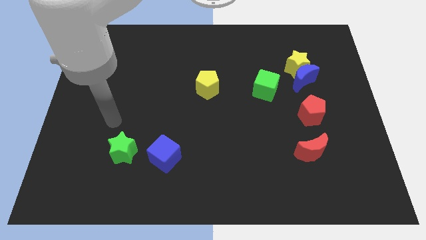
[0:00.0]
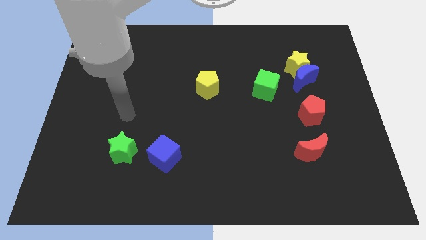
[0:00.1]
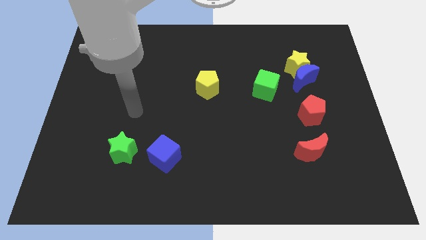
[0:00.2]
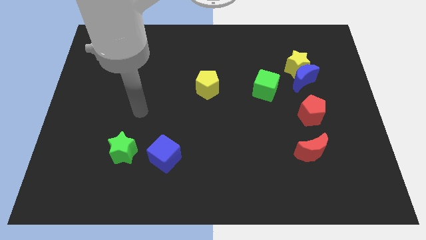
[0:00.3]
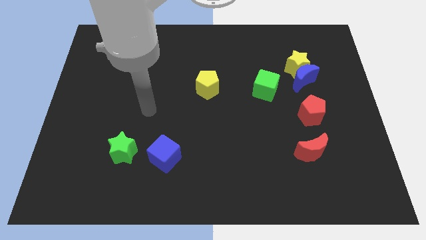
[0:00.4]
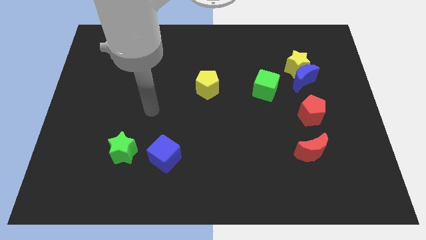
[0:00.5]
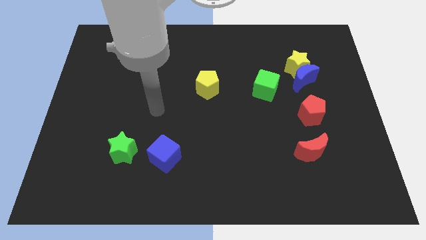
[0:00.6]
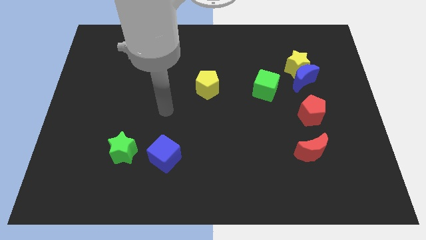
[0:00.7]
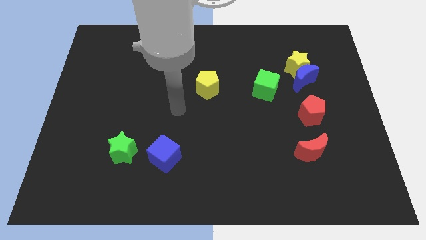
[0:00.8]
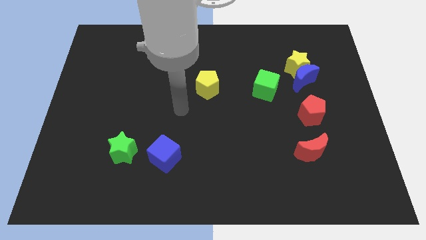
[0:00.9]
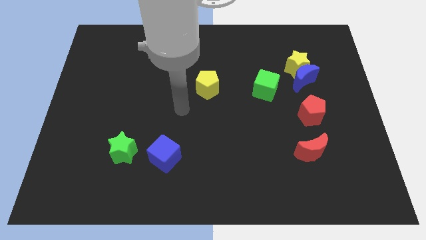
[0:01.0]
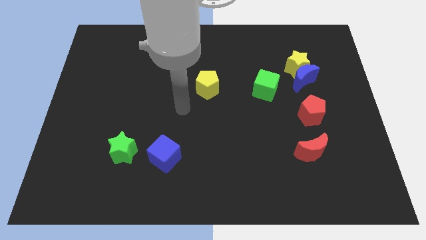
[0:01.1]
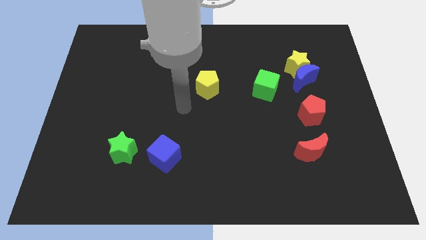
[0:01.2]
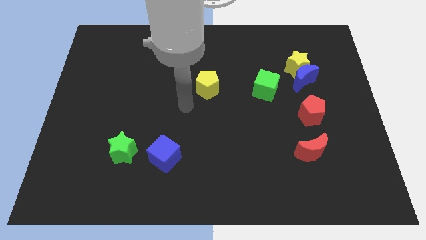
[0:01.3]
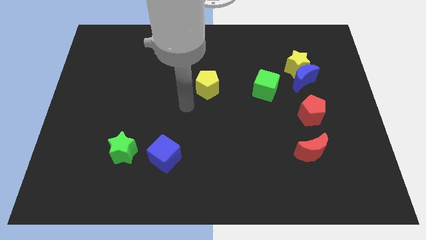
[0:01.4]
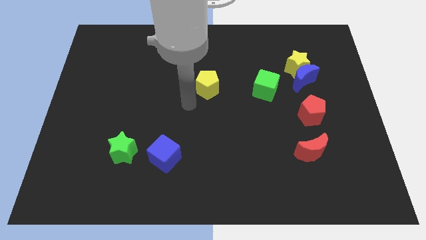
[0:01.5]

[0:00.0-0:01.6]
move your arm towards the center of the board

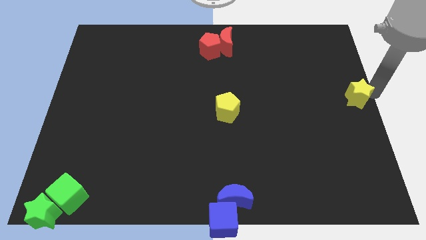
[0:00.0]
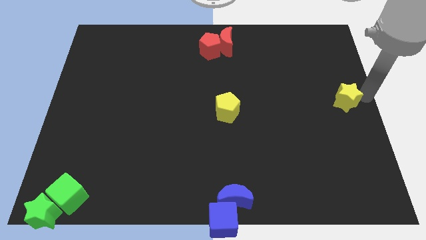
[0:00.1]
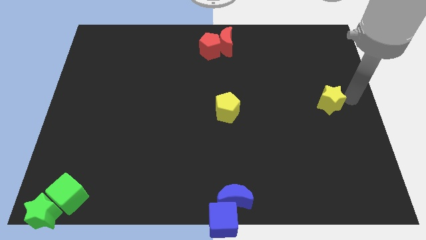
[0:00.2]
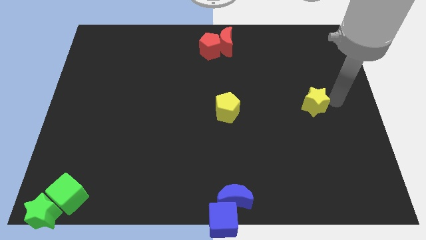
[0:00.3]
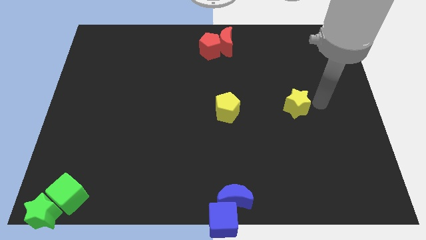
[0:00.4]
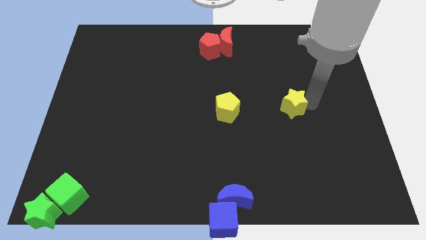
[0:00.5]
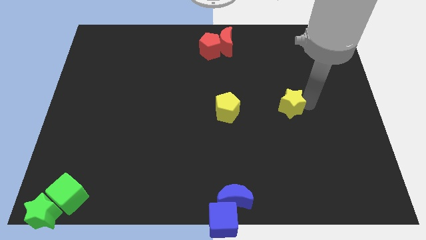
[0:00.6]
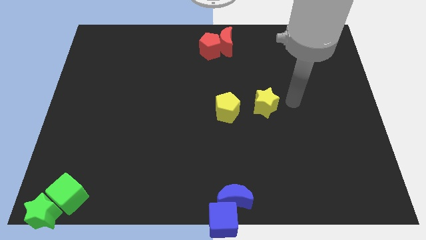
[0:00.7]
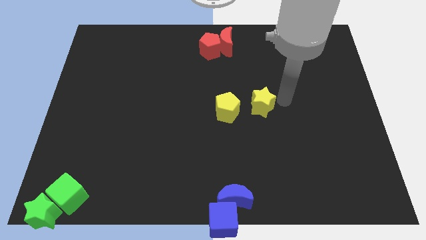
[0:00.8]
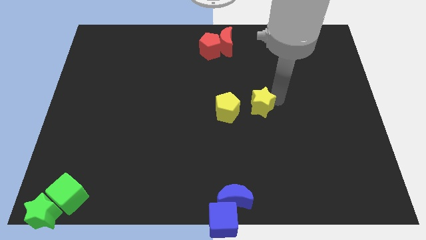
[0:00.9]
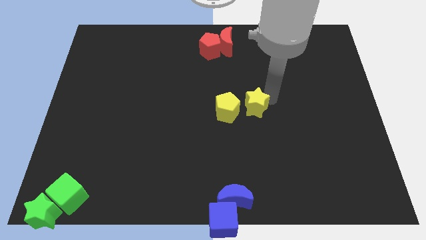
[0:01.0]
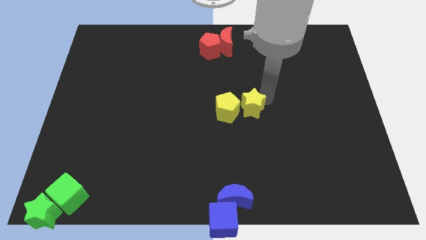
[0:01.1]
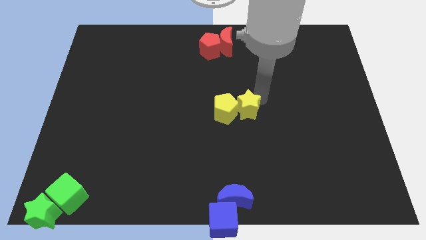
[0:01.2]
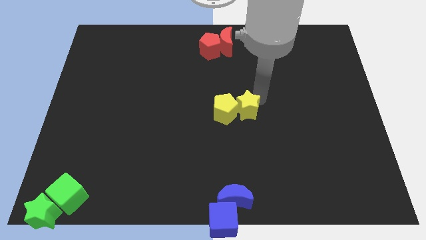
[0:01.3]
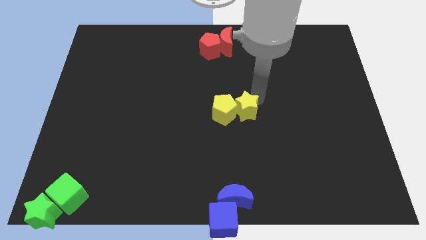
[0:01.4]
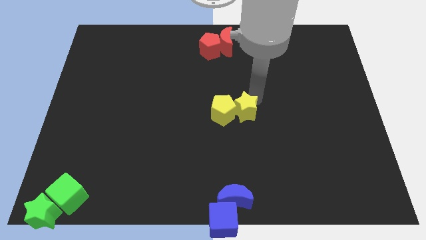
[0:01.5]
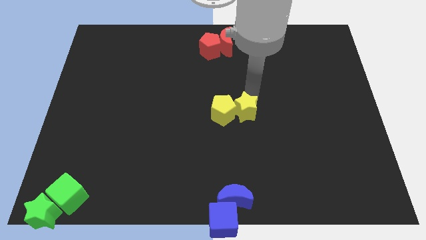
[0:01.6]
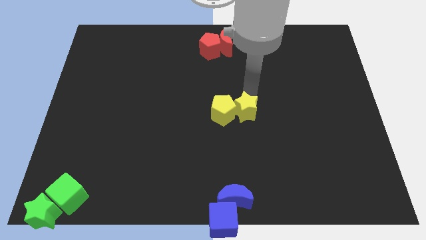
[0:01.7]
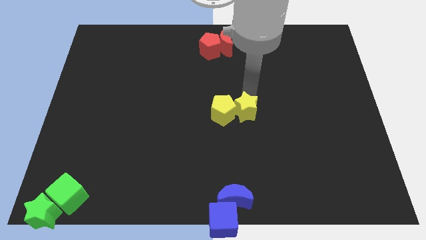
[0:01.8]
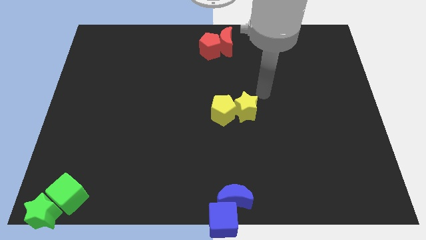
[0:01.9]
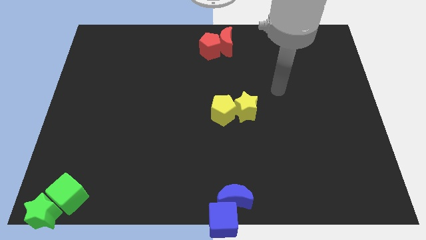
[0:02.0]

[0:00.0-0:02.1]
place a yellow star to the right of yellow pentagon

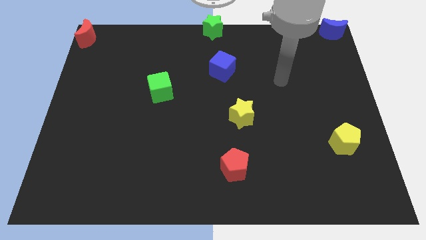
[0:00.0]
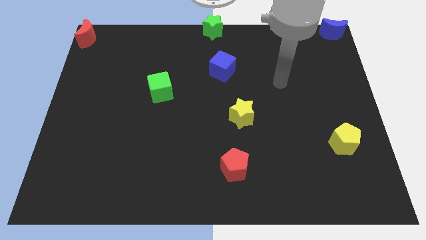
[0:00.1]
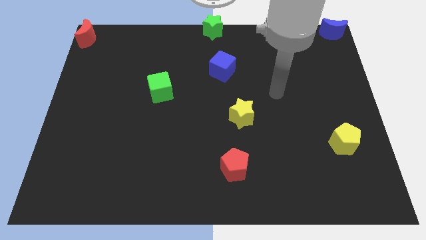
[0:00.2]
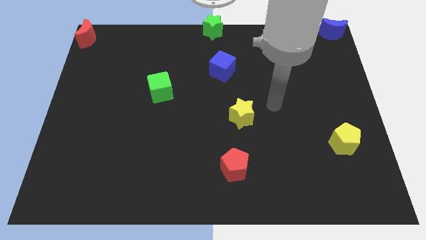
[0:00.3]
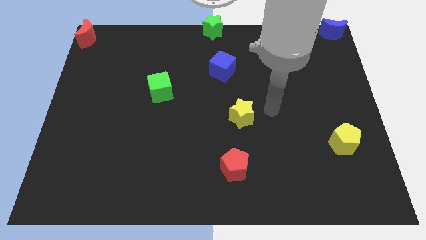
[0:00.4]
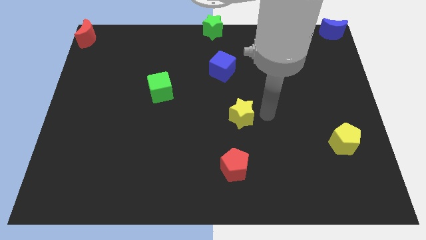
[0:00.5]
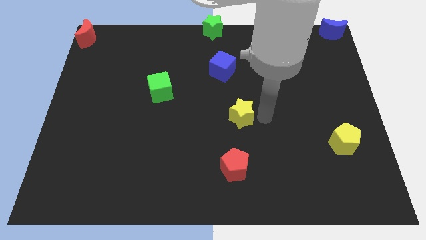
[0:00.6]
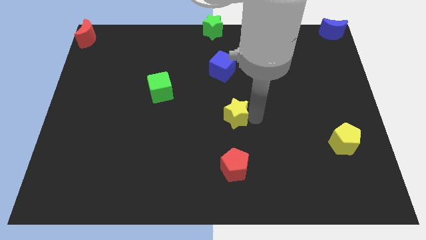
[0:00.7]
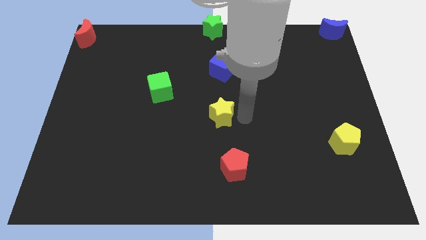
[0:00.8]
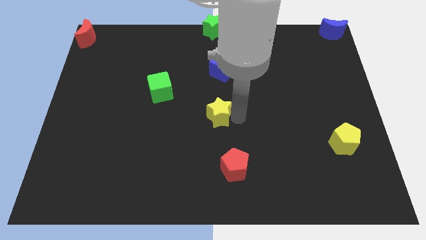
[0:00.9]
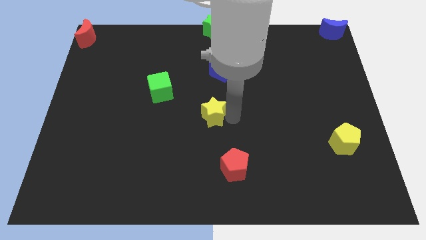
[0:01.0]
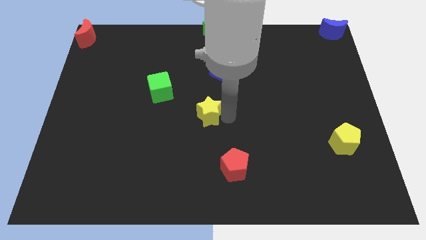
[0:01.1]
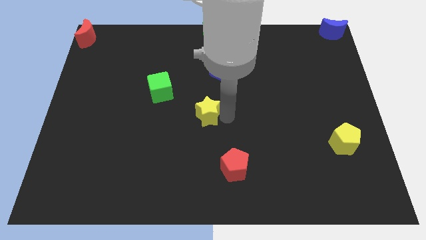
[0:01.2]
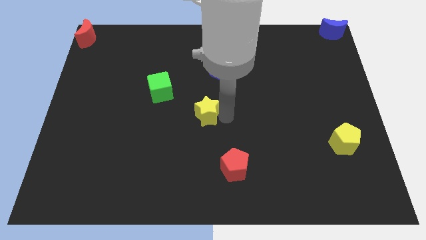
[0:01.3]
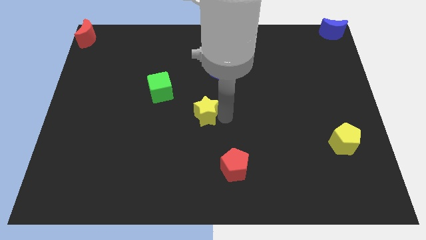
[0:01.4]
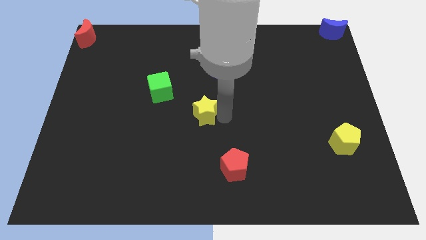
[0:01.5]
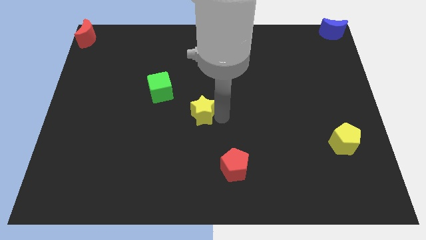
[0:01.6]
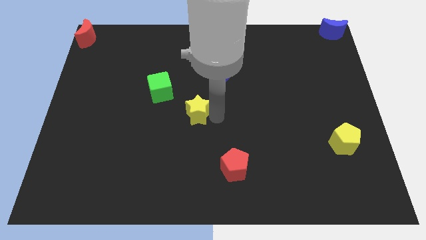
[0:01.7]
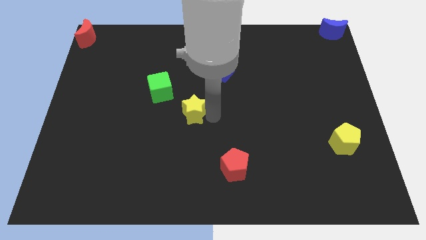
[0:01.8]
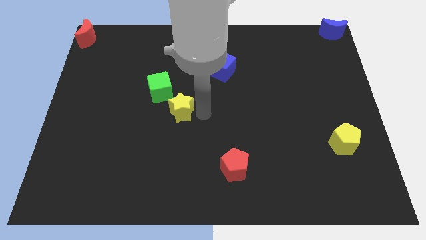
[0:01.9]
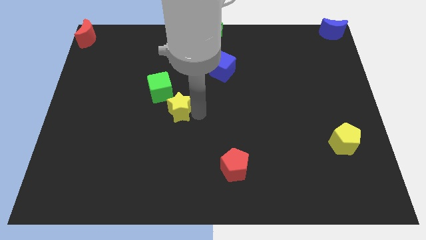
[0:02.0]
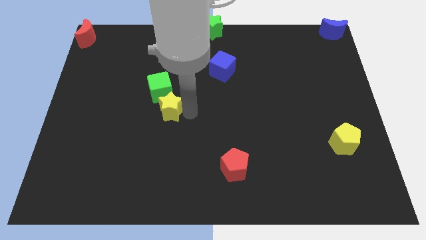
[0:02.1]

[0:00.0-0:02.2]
push the yellow star to the bottom of the green cube

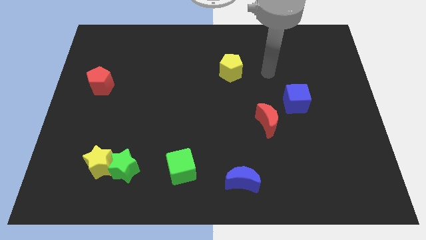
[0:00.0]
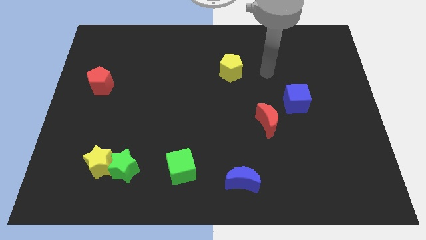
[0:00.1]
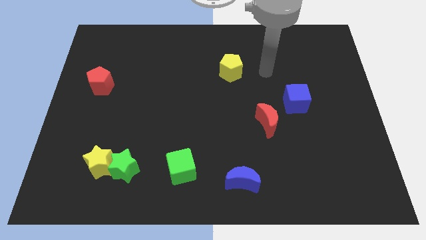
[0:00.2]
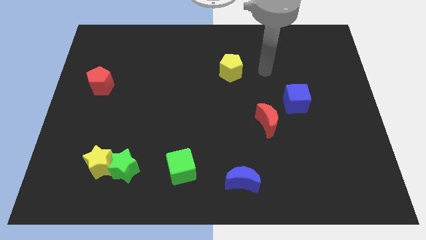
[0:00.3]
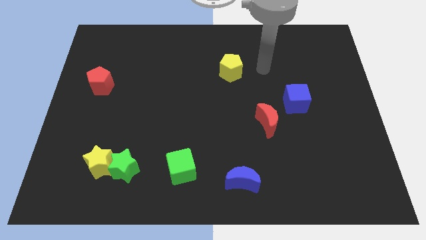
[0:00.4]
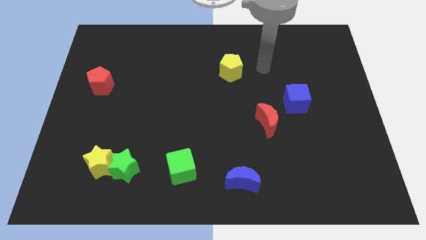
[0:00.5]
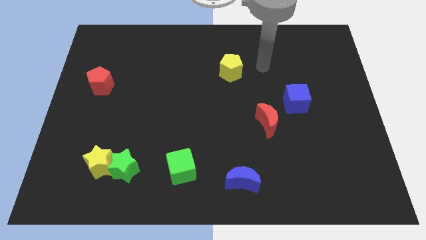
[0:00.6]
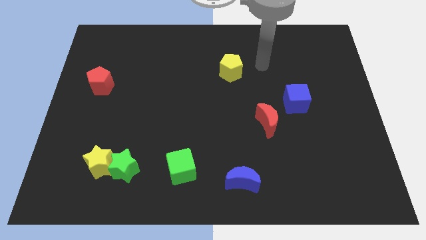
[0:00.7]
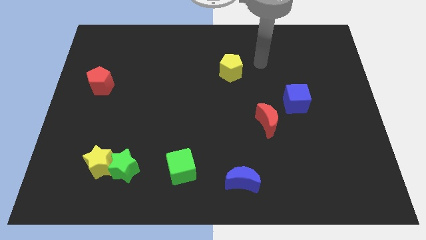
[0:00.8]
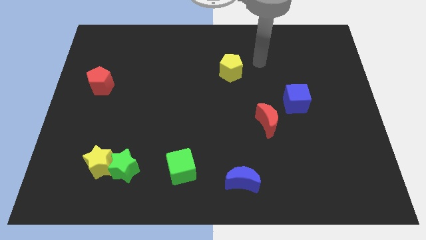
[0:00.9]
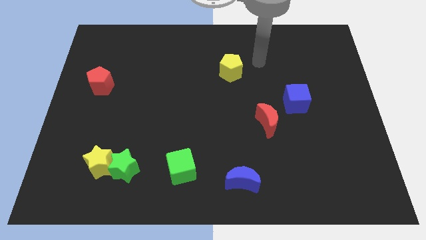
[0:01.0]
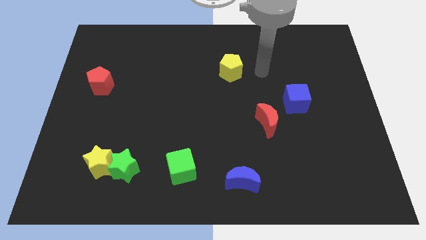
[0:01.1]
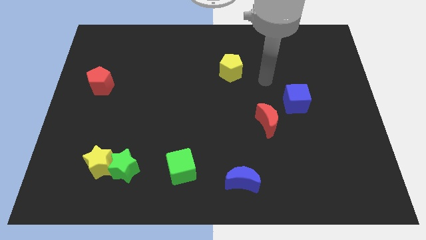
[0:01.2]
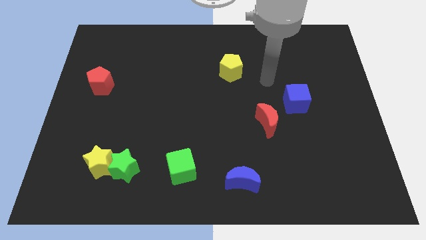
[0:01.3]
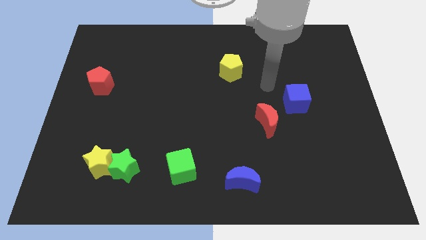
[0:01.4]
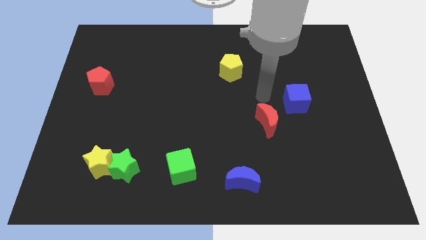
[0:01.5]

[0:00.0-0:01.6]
move arm above the red moon

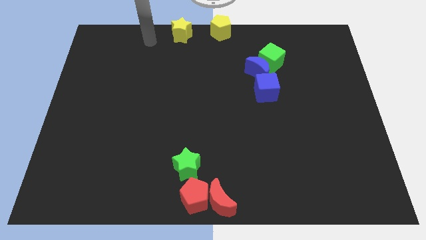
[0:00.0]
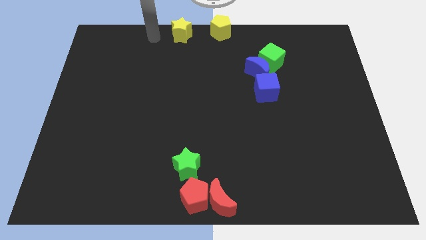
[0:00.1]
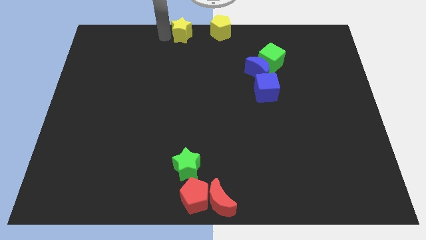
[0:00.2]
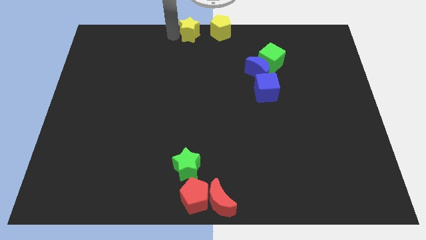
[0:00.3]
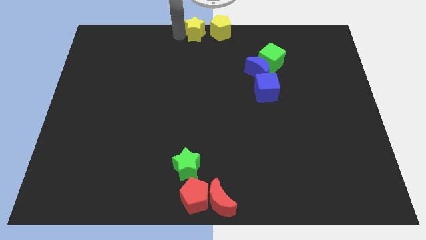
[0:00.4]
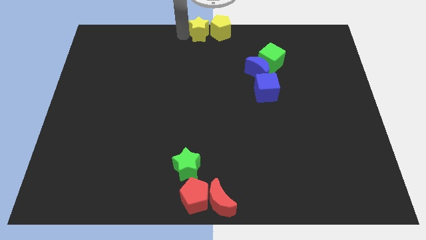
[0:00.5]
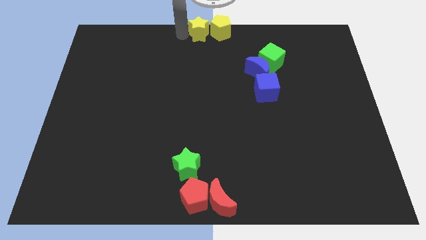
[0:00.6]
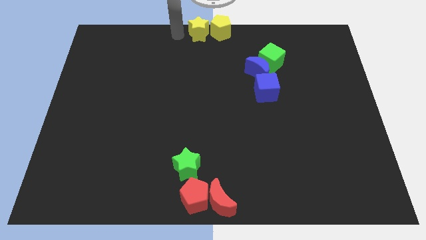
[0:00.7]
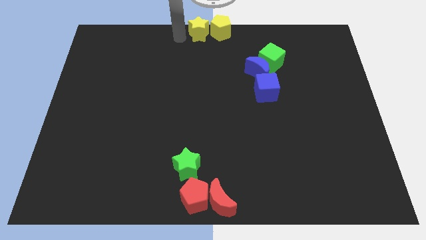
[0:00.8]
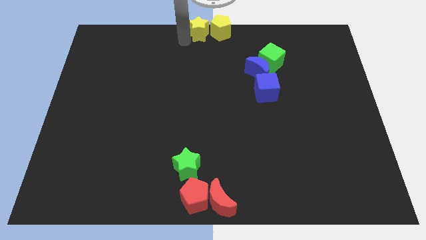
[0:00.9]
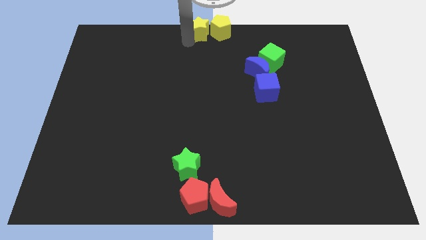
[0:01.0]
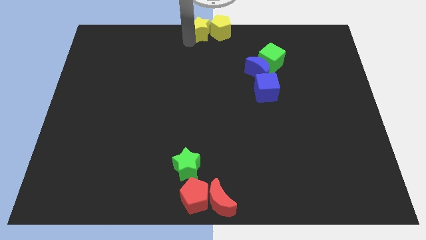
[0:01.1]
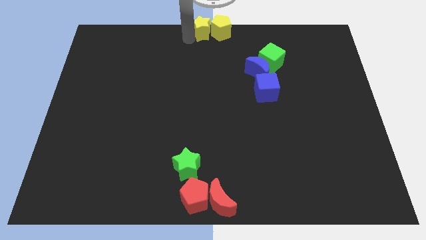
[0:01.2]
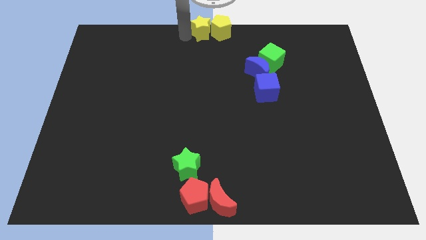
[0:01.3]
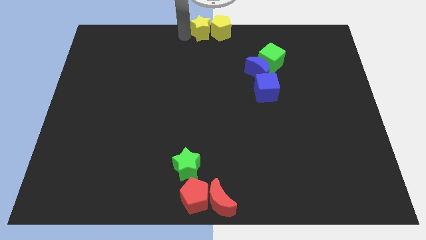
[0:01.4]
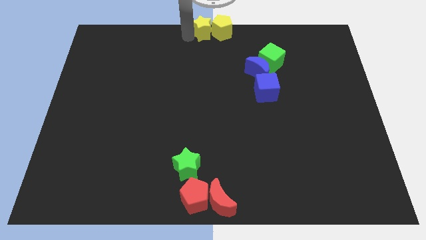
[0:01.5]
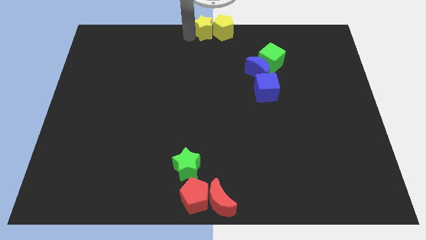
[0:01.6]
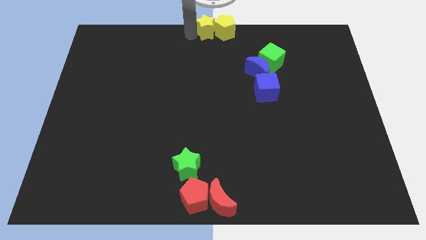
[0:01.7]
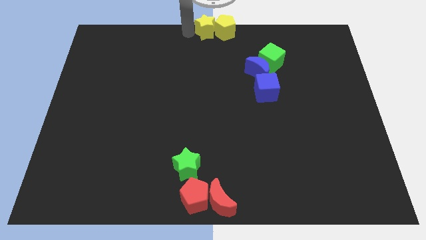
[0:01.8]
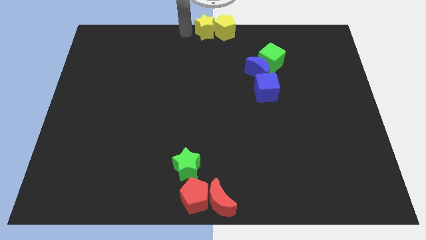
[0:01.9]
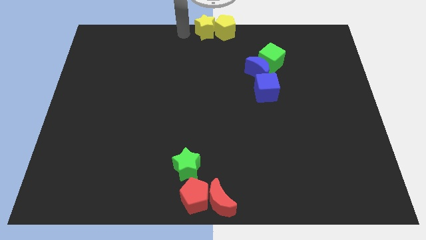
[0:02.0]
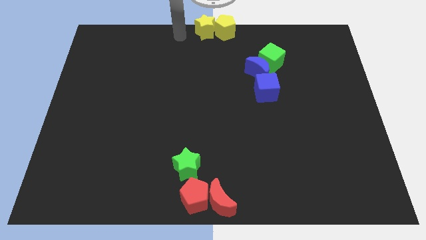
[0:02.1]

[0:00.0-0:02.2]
slide the yellow star into the yellow pentagon
